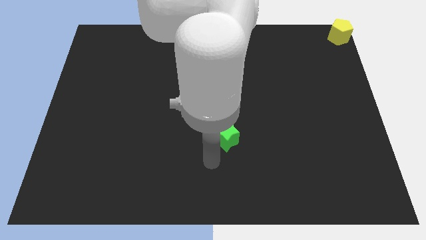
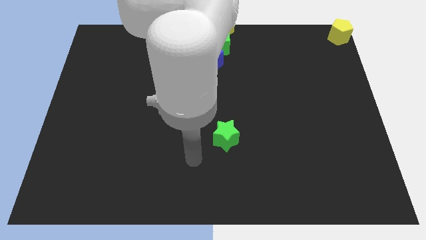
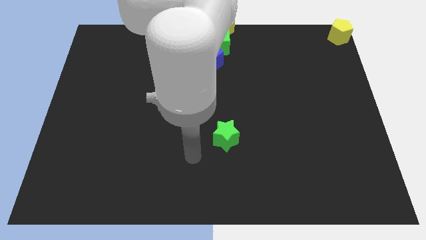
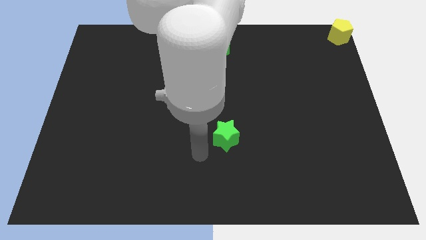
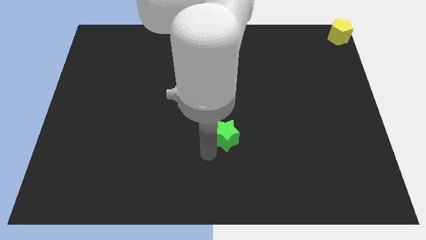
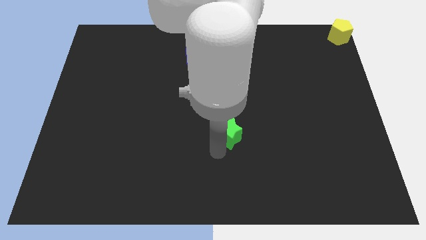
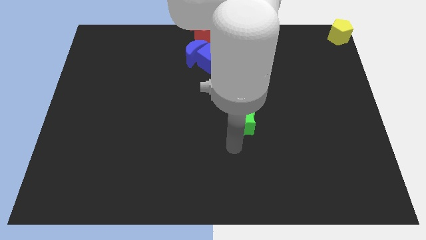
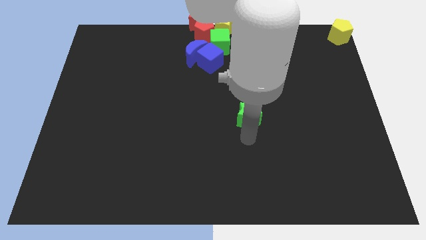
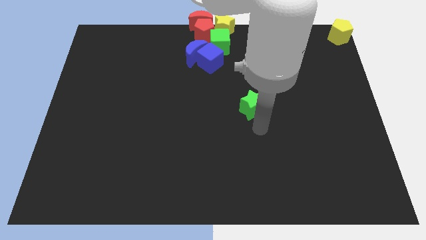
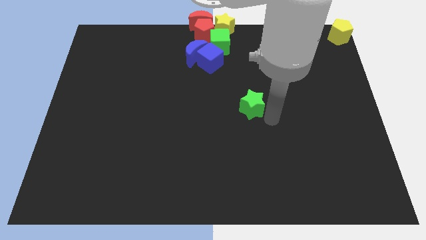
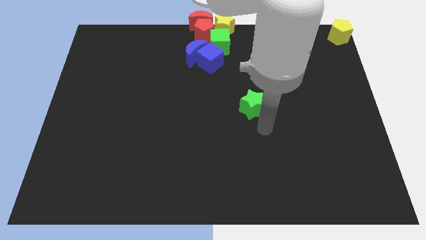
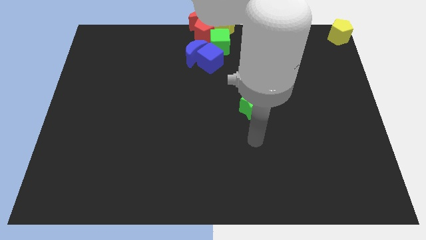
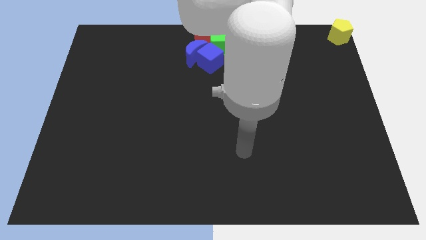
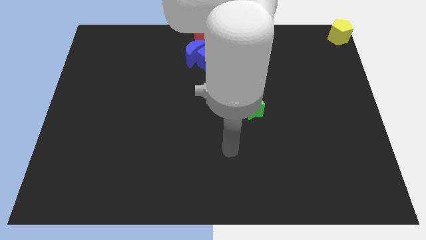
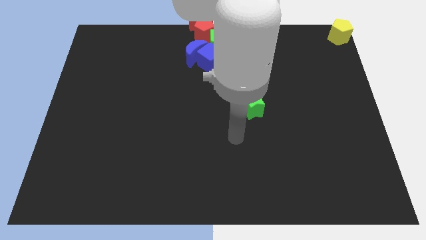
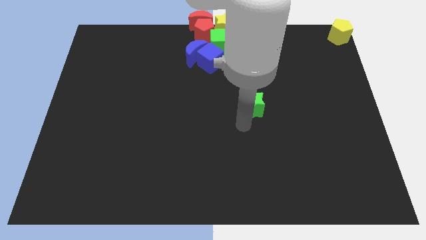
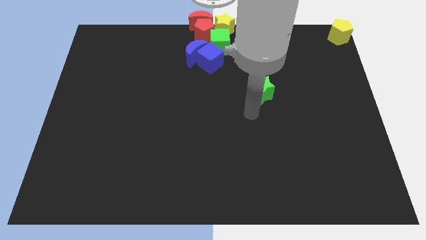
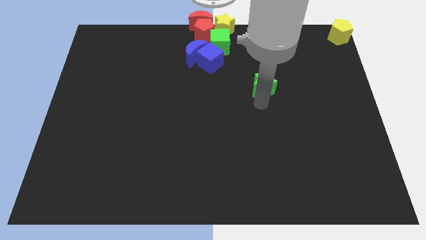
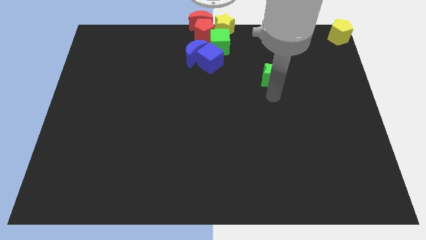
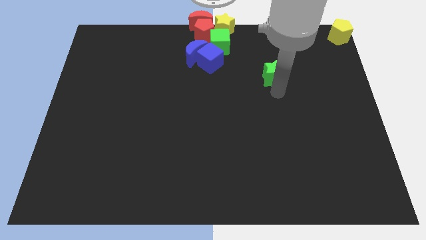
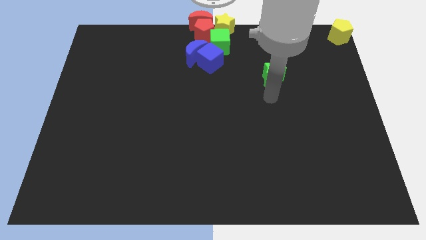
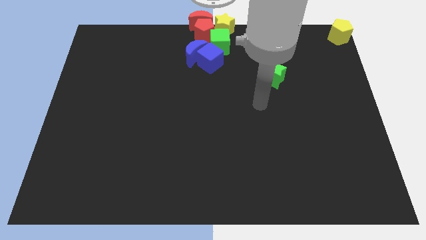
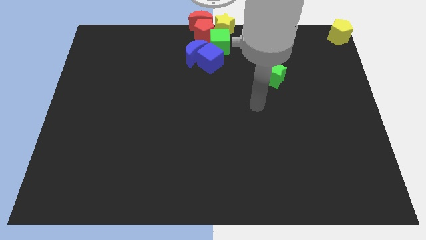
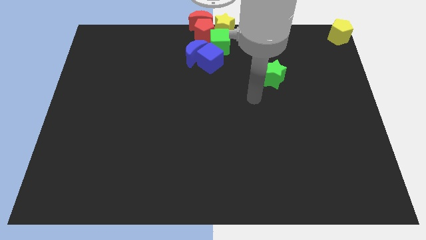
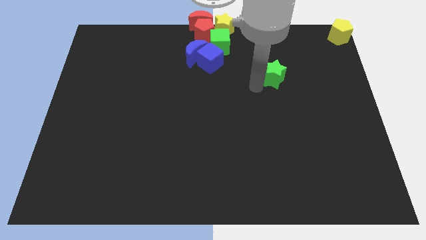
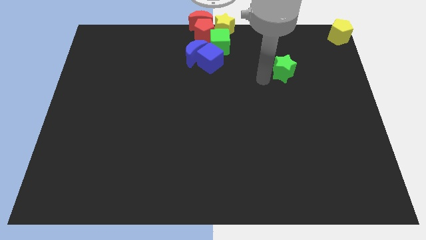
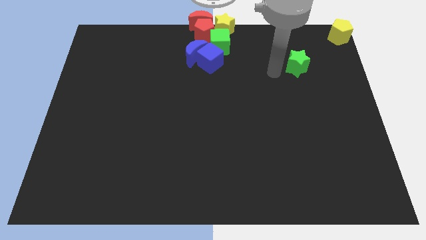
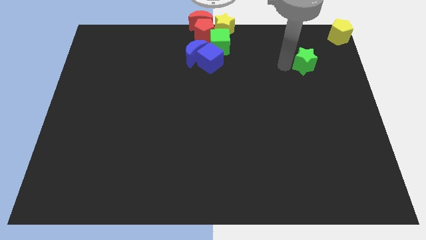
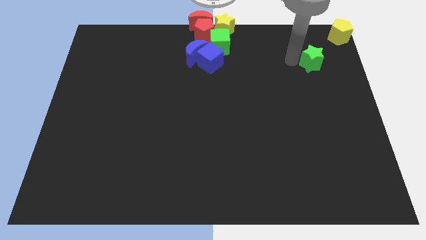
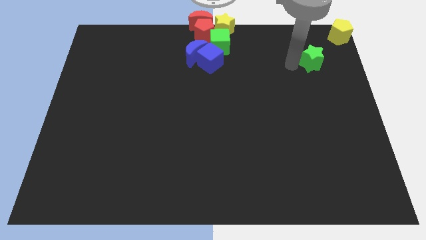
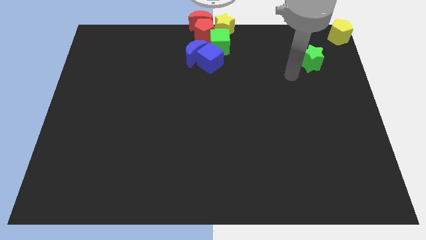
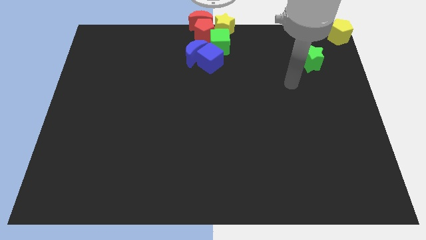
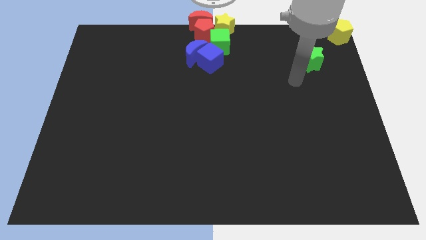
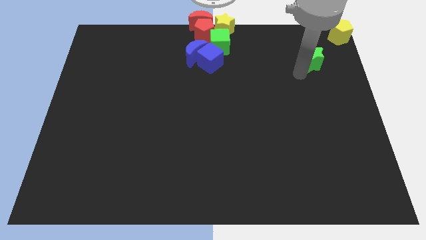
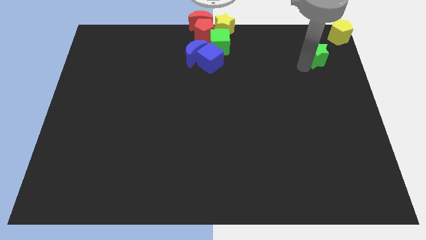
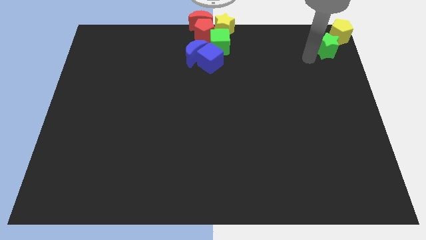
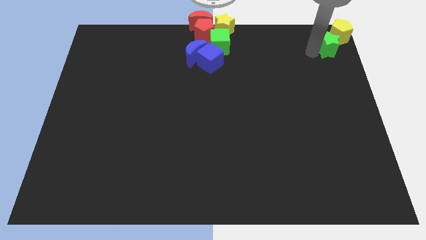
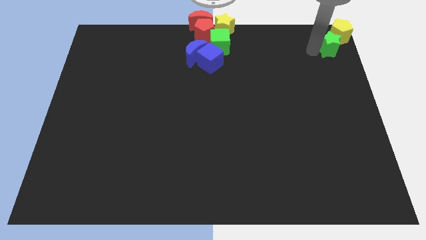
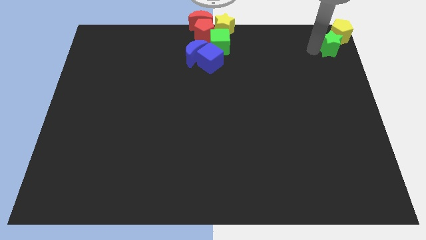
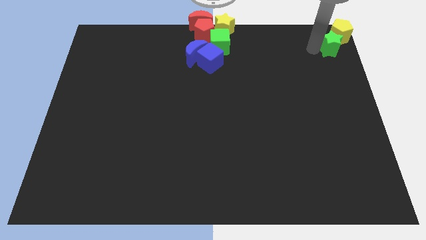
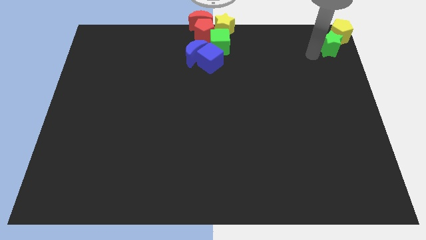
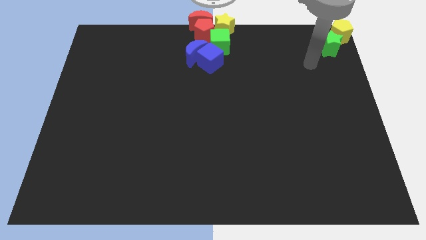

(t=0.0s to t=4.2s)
place the green star below the yellow penatgon

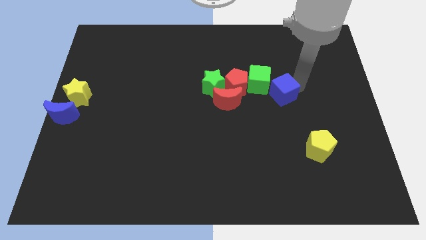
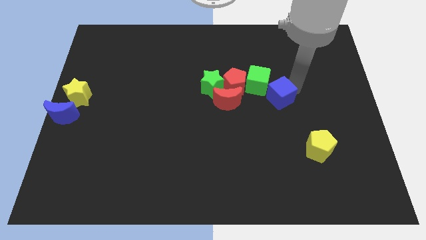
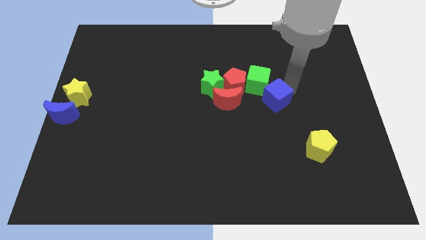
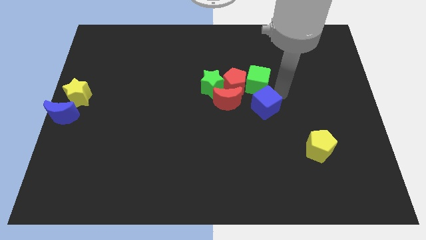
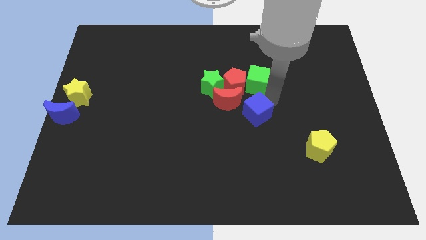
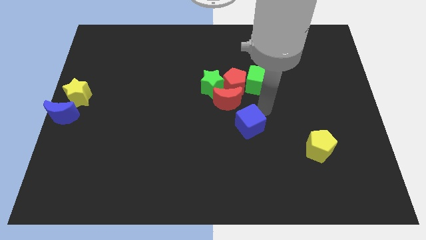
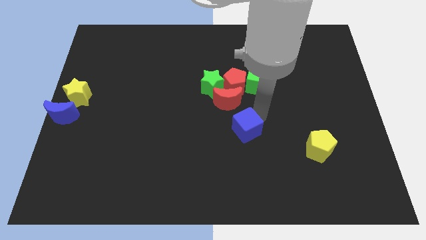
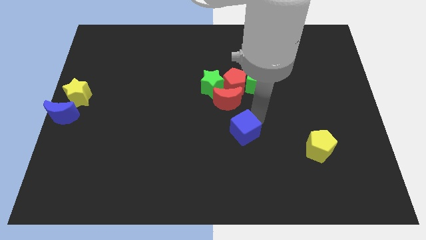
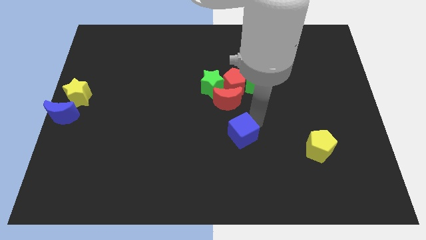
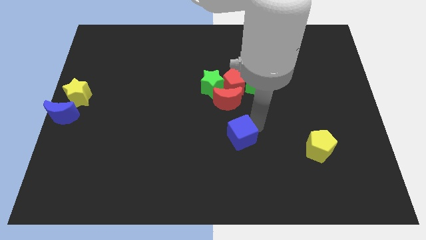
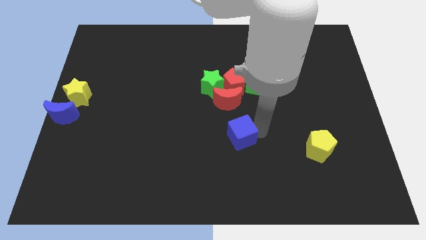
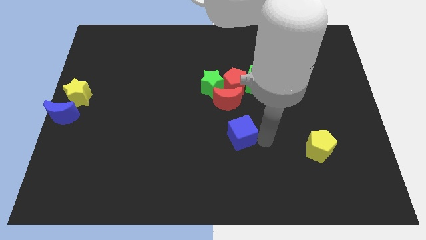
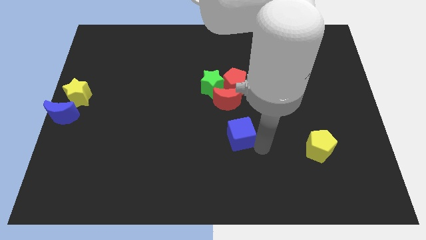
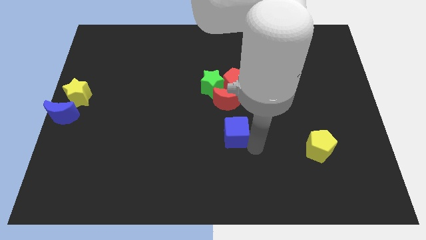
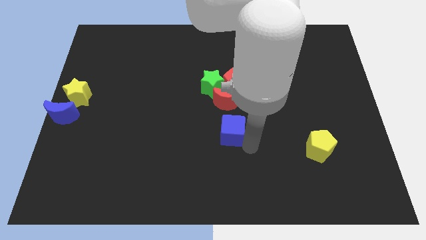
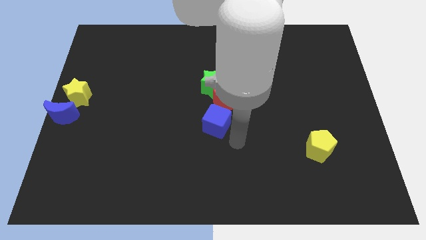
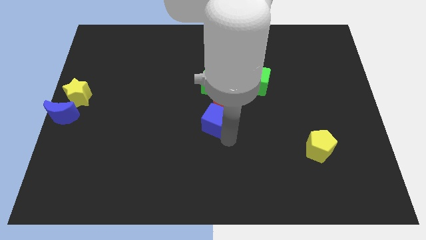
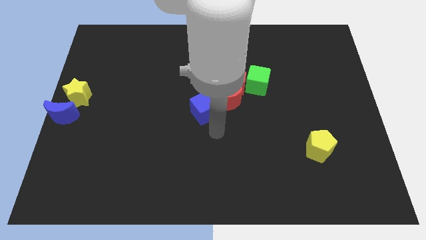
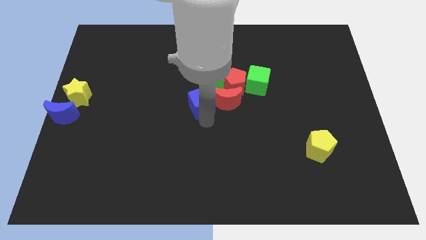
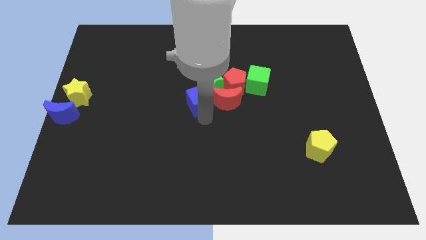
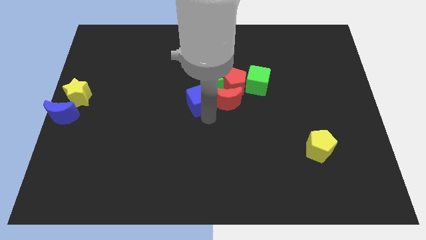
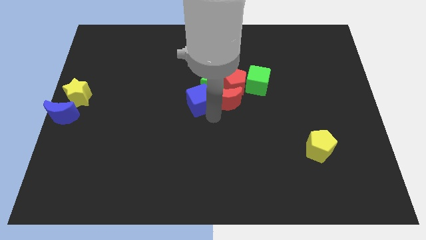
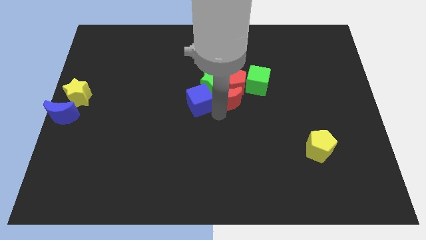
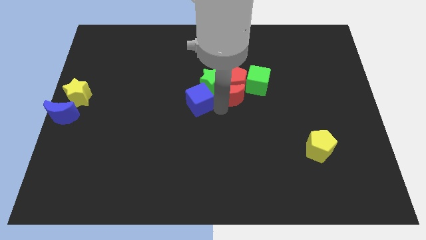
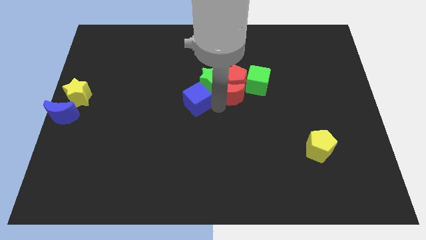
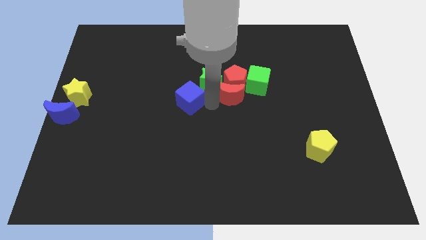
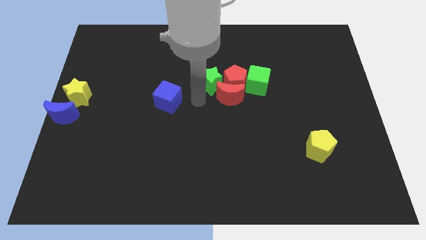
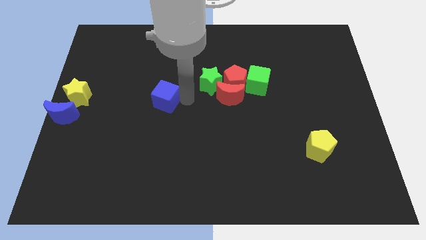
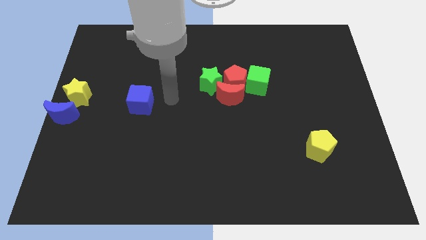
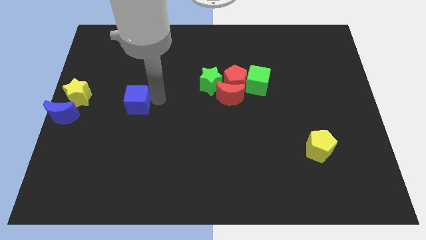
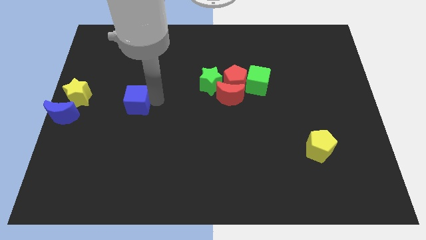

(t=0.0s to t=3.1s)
slide the blue cube towards the center left

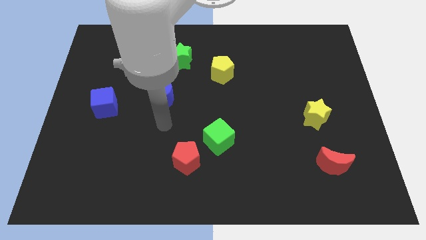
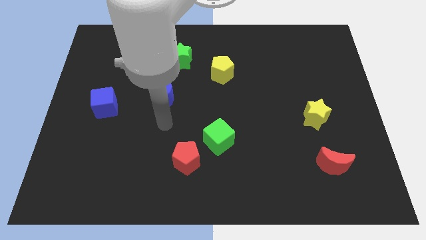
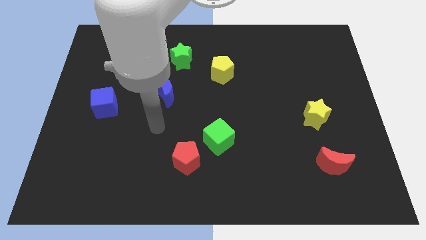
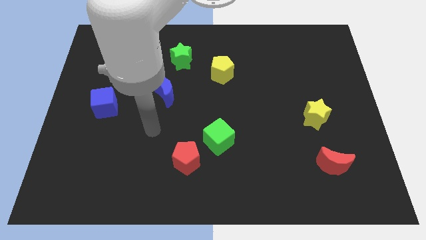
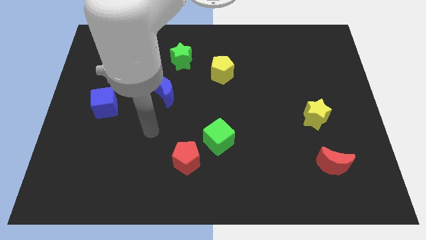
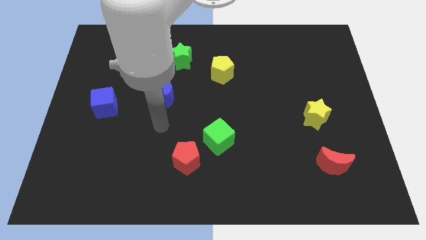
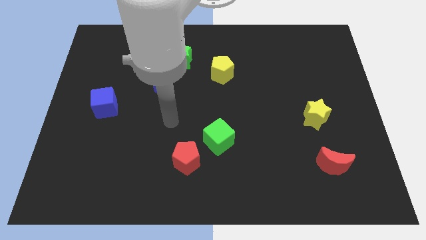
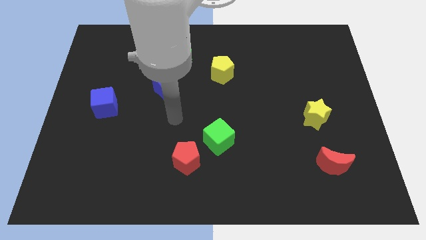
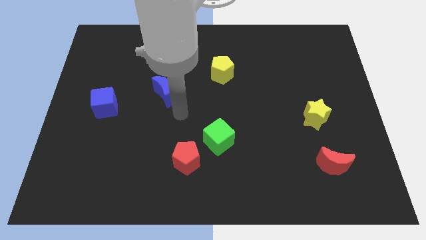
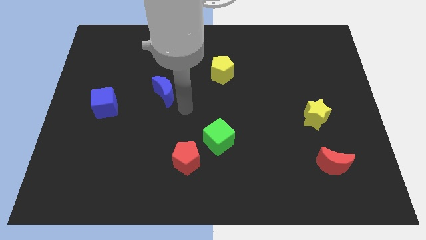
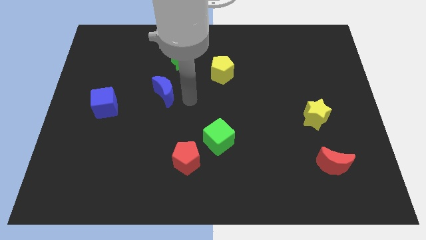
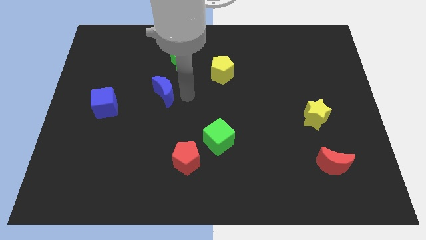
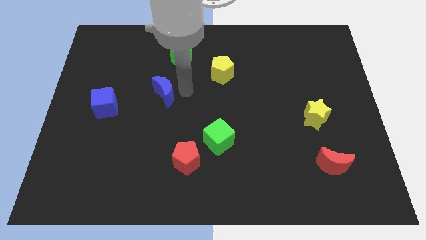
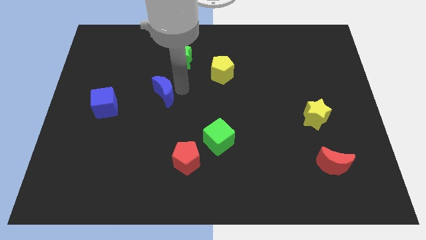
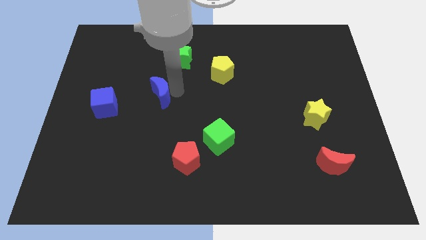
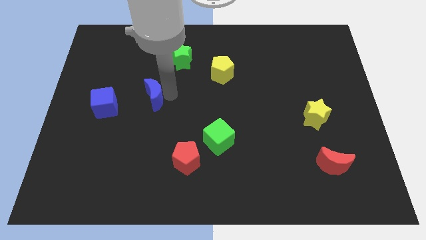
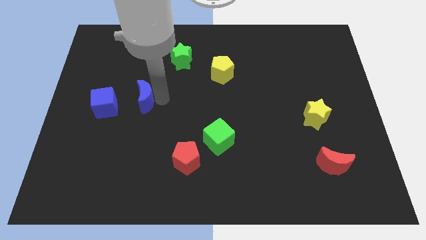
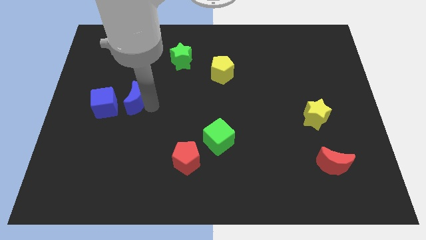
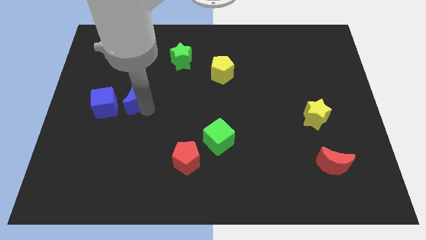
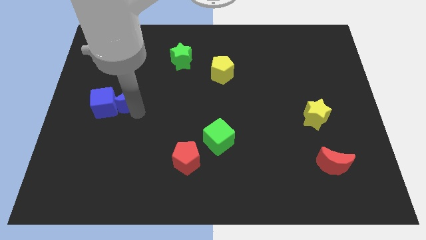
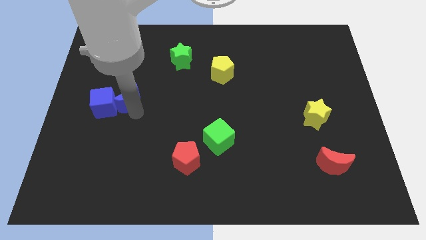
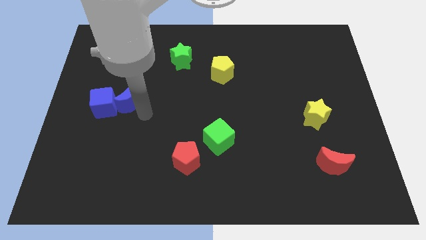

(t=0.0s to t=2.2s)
slide blue moon into blue cube
